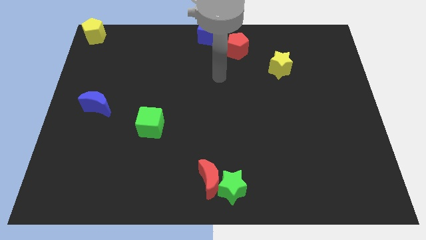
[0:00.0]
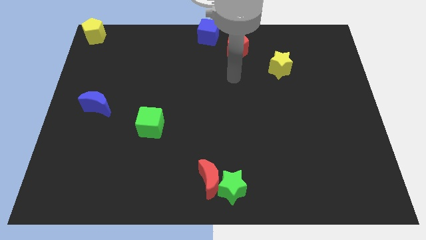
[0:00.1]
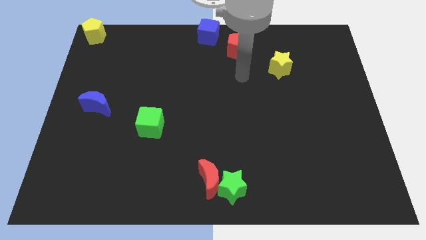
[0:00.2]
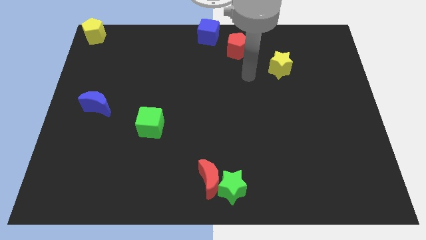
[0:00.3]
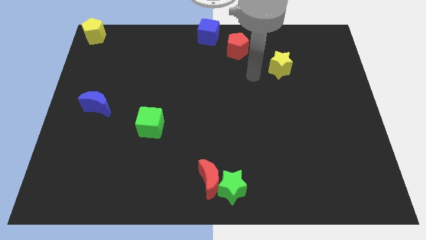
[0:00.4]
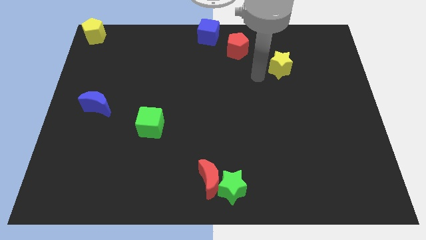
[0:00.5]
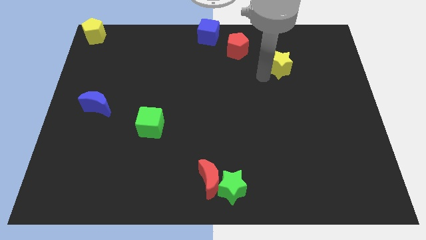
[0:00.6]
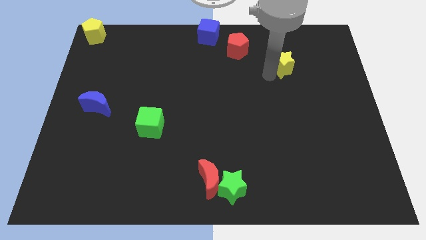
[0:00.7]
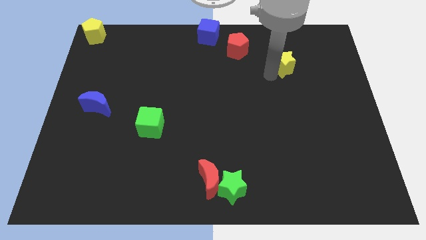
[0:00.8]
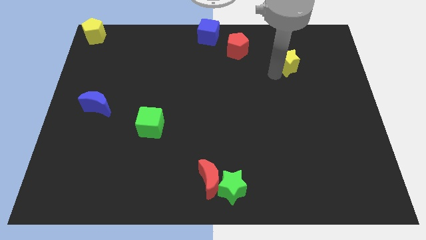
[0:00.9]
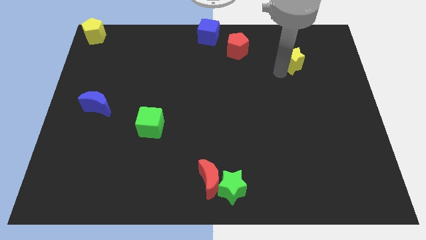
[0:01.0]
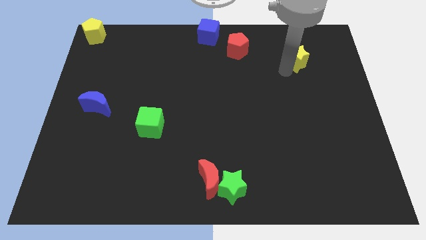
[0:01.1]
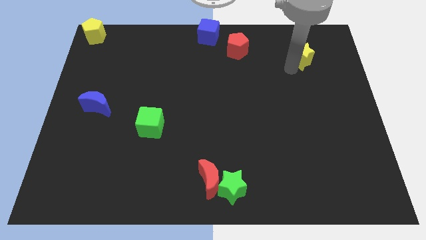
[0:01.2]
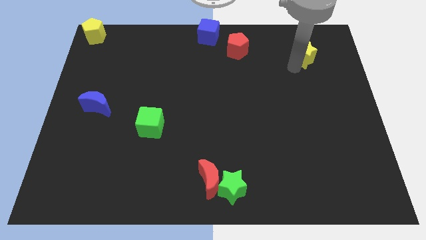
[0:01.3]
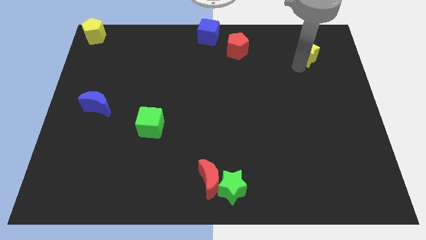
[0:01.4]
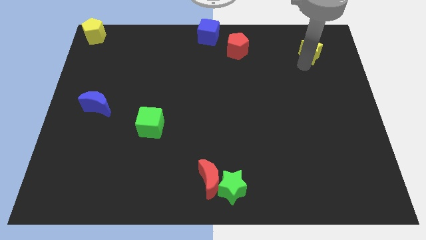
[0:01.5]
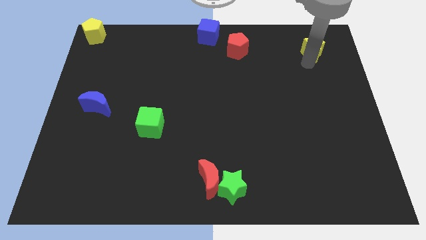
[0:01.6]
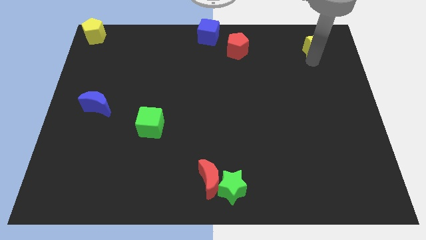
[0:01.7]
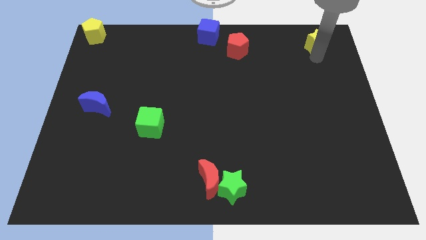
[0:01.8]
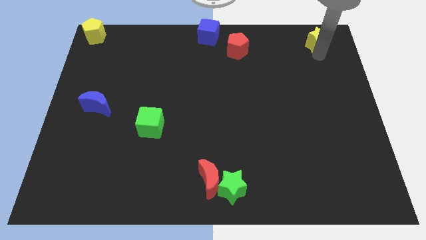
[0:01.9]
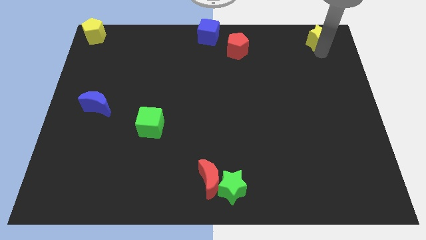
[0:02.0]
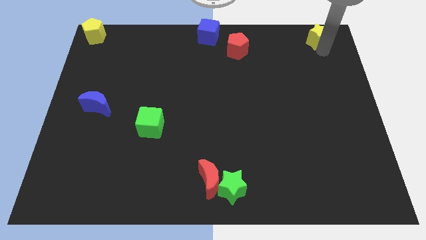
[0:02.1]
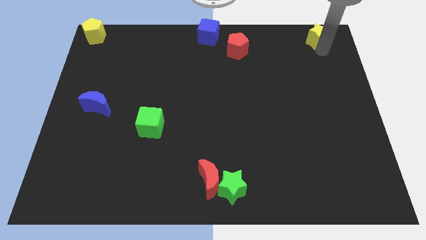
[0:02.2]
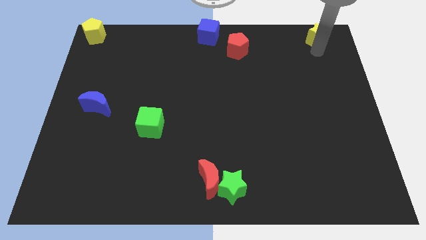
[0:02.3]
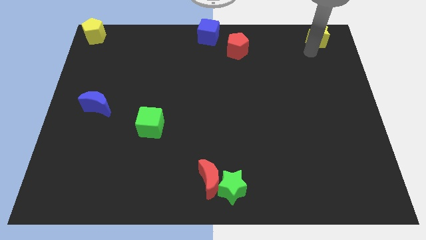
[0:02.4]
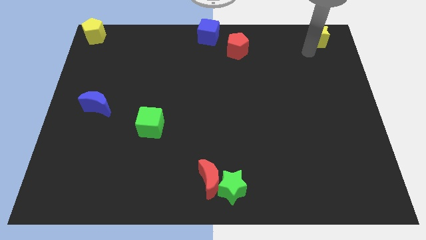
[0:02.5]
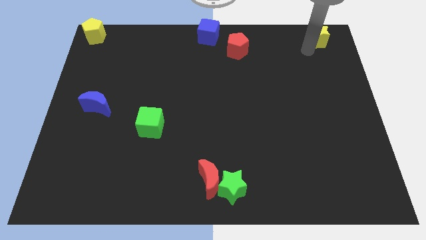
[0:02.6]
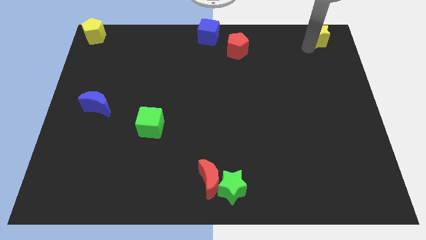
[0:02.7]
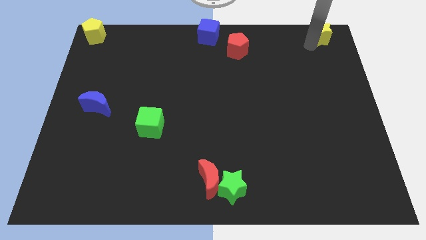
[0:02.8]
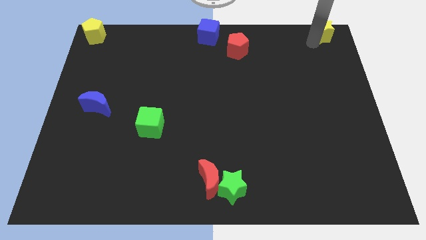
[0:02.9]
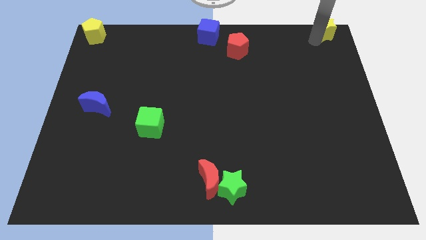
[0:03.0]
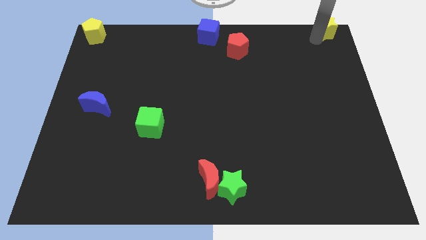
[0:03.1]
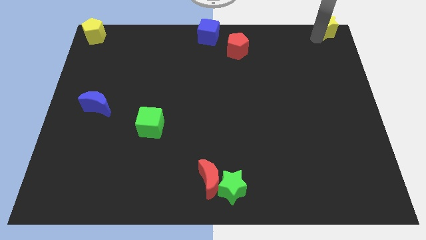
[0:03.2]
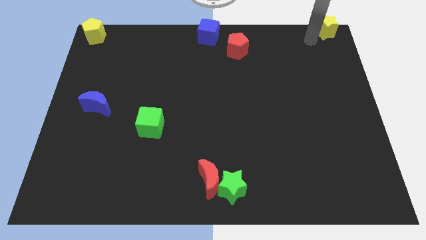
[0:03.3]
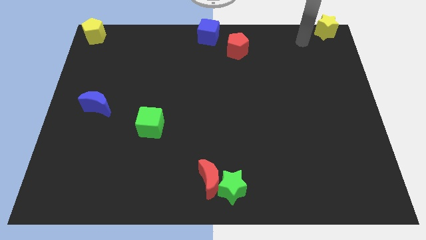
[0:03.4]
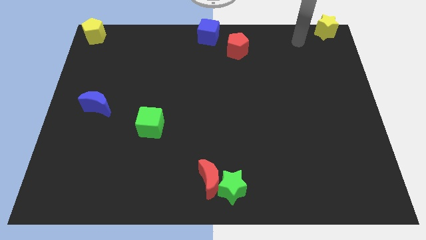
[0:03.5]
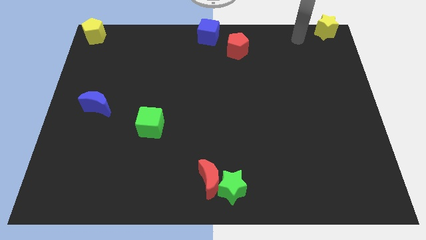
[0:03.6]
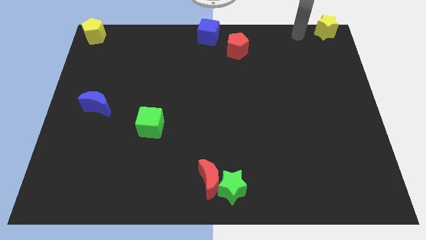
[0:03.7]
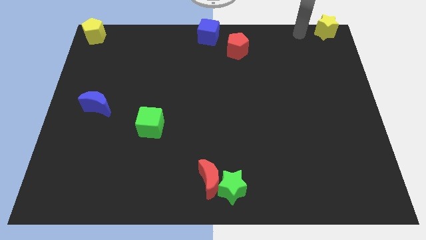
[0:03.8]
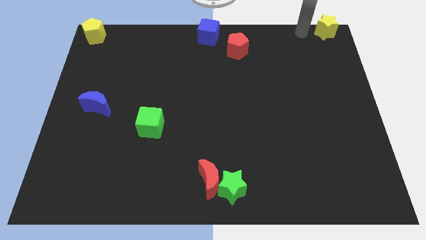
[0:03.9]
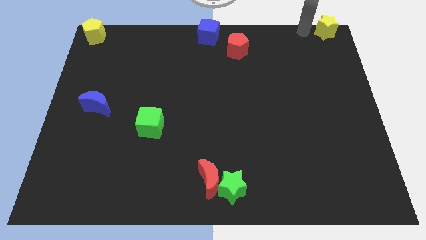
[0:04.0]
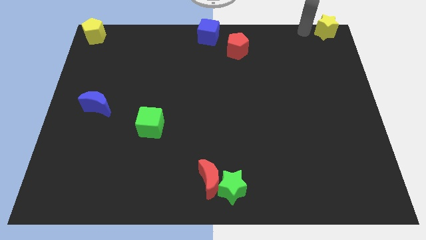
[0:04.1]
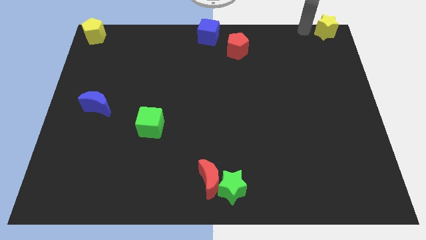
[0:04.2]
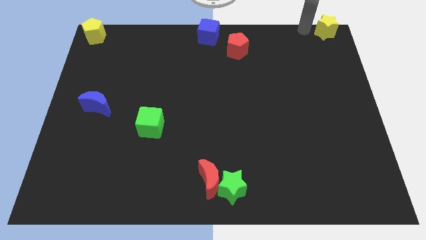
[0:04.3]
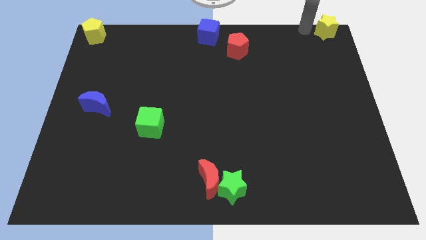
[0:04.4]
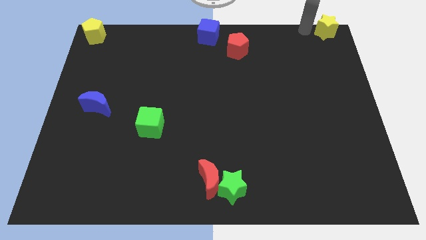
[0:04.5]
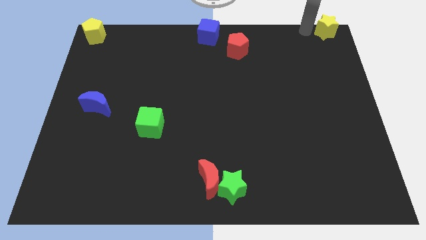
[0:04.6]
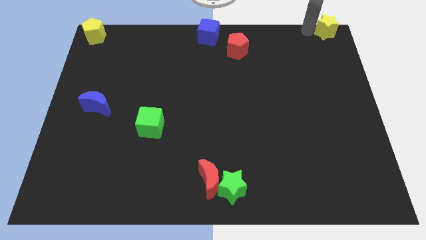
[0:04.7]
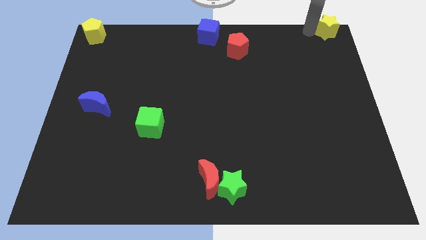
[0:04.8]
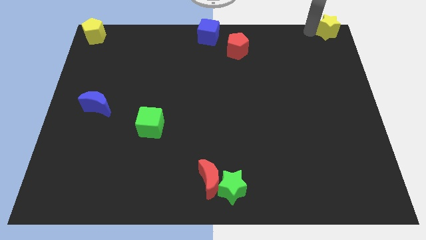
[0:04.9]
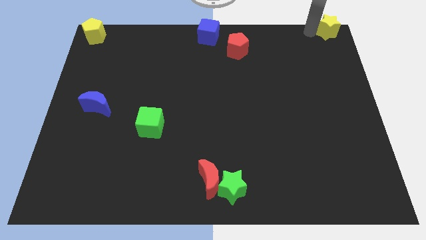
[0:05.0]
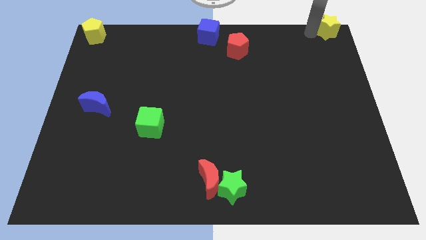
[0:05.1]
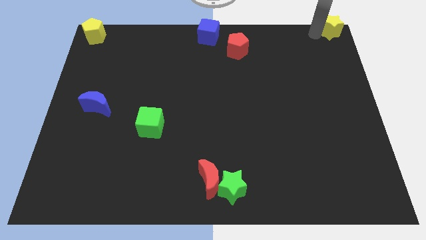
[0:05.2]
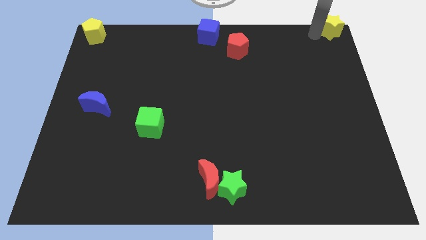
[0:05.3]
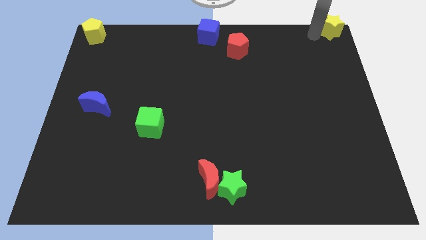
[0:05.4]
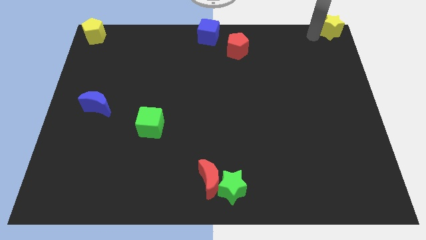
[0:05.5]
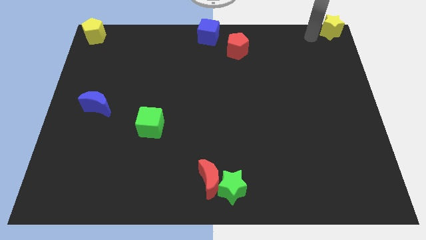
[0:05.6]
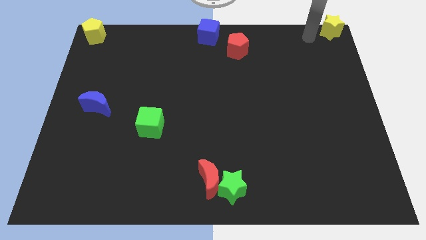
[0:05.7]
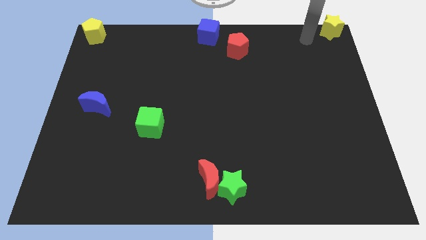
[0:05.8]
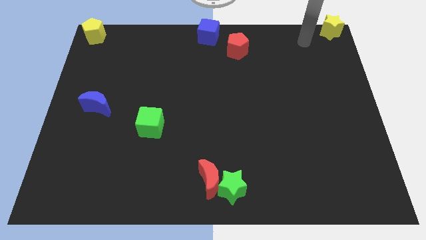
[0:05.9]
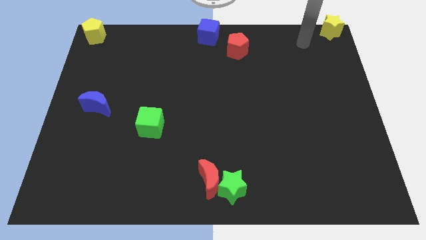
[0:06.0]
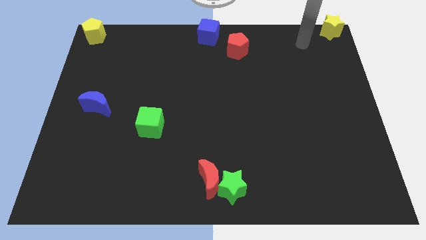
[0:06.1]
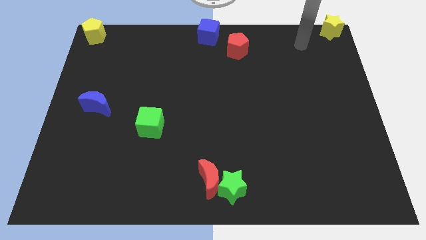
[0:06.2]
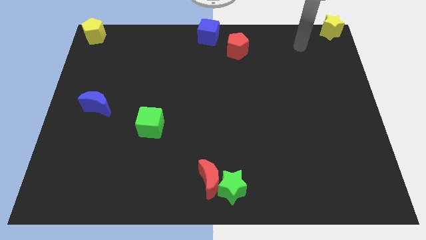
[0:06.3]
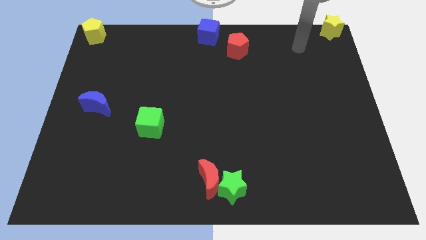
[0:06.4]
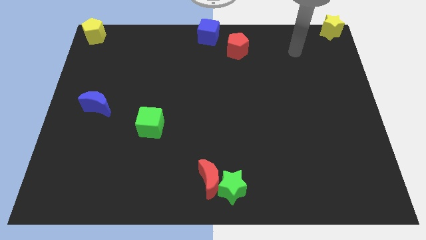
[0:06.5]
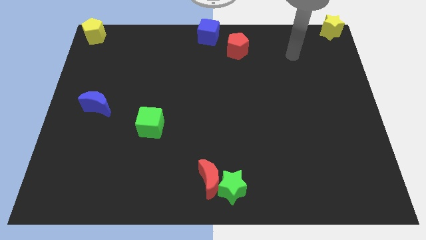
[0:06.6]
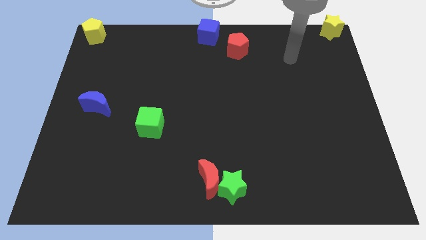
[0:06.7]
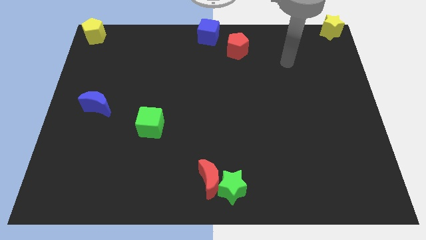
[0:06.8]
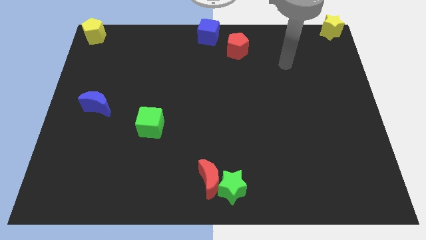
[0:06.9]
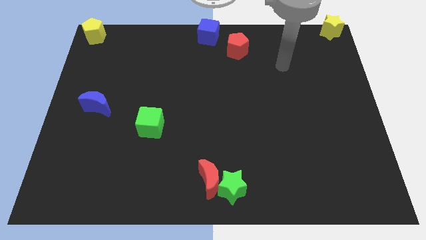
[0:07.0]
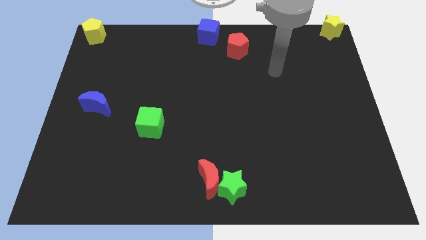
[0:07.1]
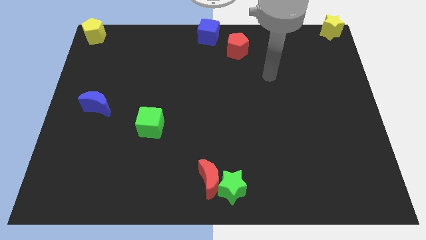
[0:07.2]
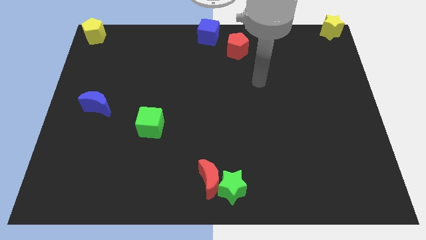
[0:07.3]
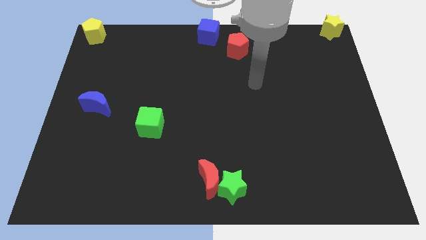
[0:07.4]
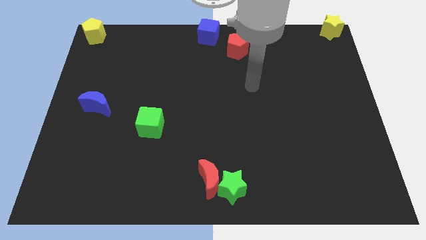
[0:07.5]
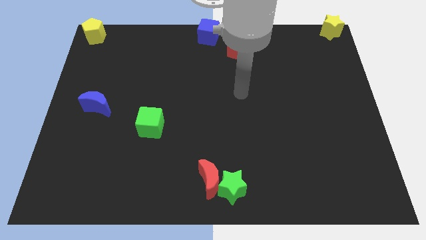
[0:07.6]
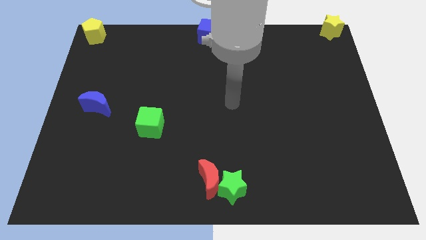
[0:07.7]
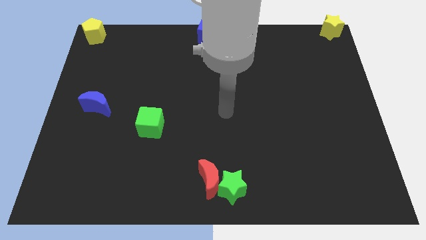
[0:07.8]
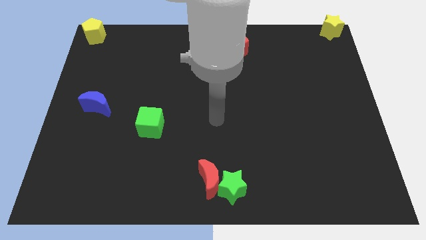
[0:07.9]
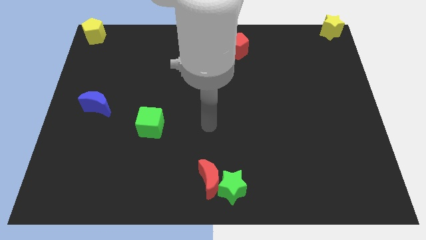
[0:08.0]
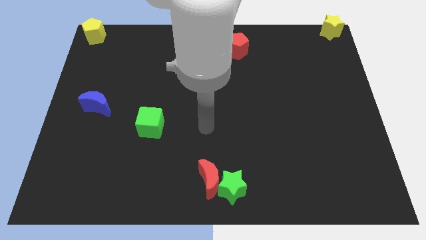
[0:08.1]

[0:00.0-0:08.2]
move the yellow star towards the top right corner of the board

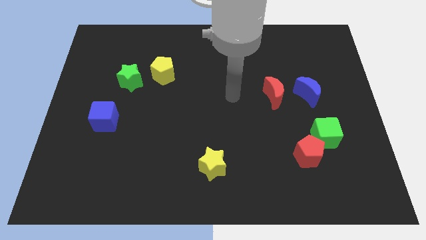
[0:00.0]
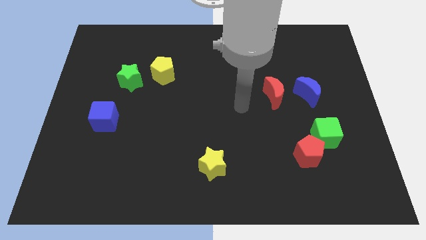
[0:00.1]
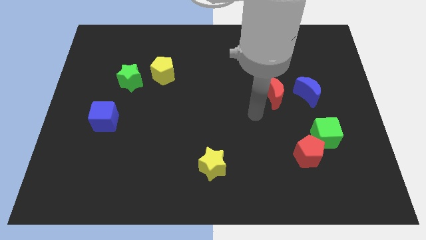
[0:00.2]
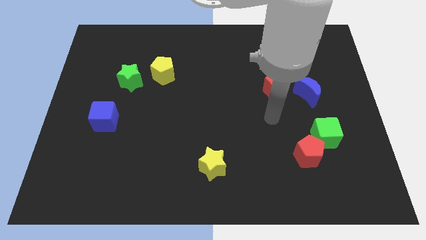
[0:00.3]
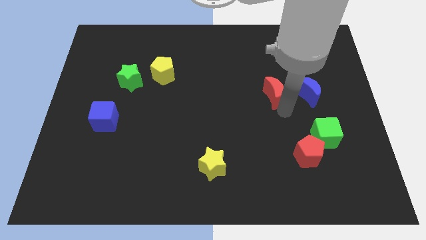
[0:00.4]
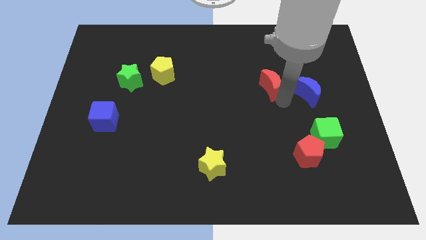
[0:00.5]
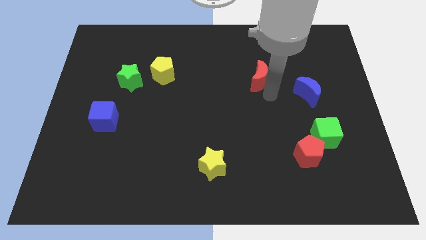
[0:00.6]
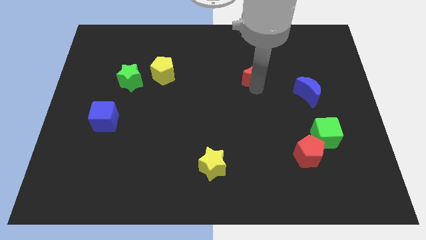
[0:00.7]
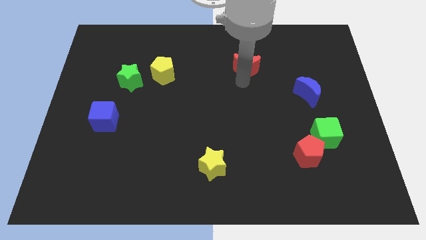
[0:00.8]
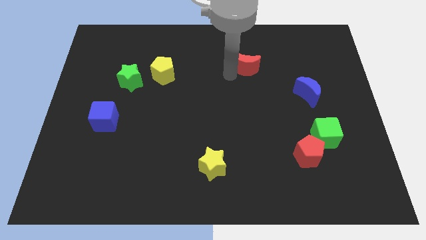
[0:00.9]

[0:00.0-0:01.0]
move the red moon slightly to the top of the board
